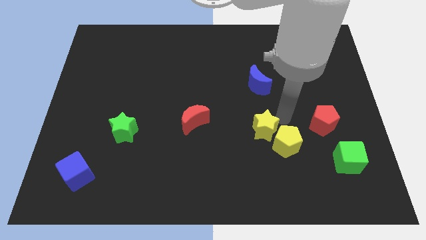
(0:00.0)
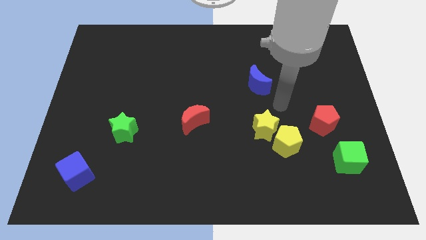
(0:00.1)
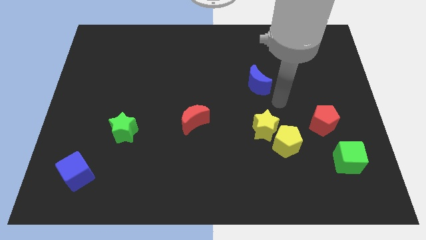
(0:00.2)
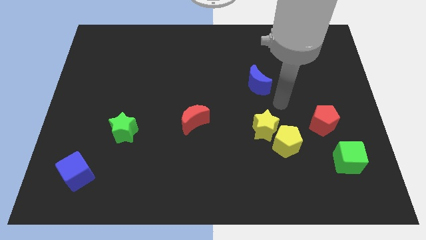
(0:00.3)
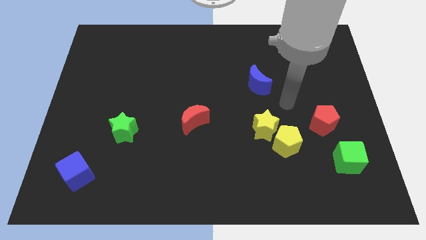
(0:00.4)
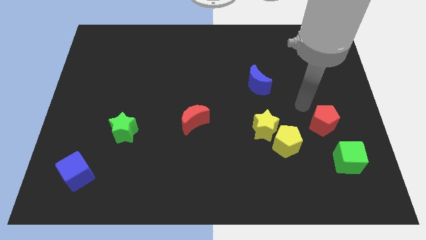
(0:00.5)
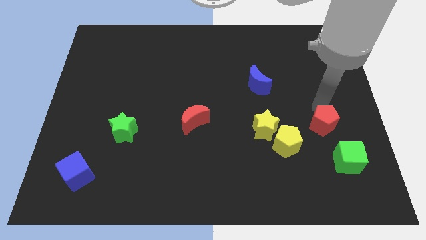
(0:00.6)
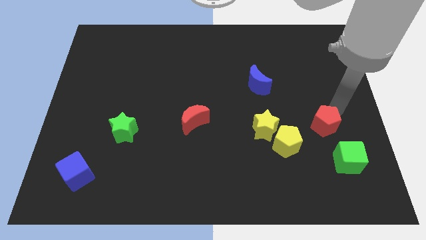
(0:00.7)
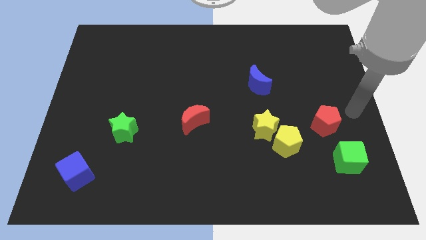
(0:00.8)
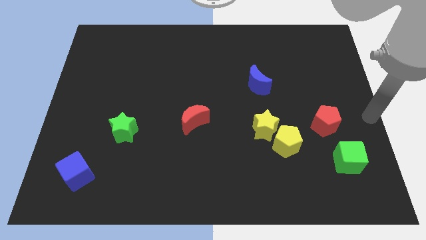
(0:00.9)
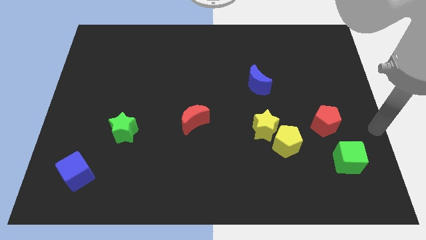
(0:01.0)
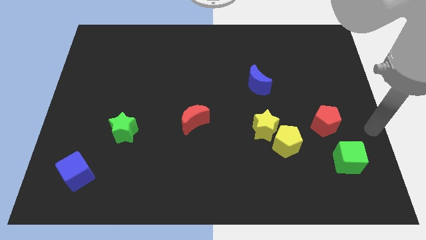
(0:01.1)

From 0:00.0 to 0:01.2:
move your arm away from the yellow blocks

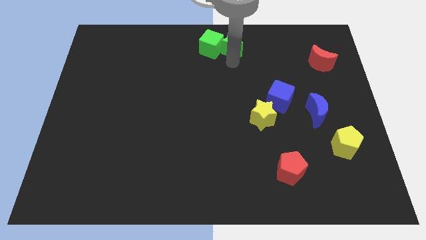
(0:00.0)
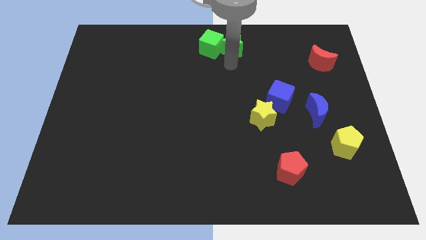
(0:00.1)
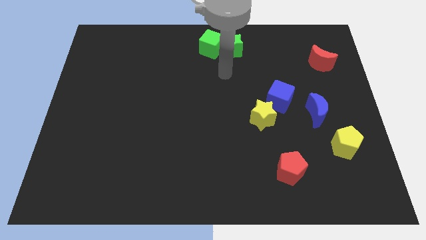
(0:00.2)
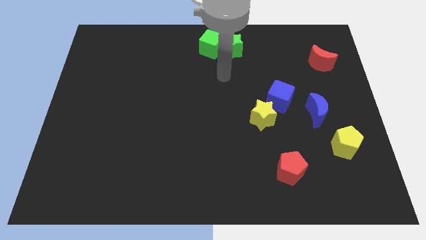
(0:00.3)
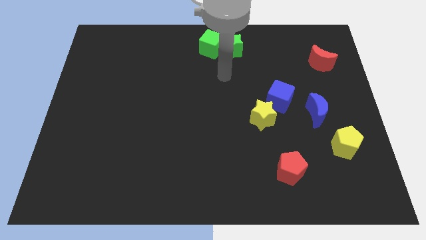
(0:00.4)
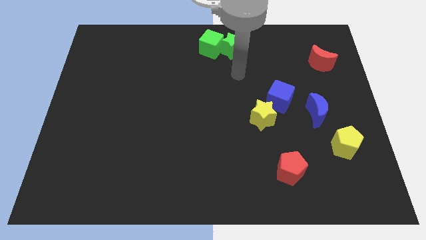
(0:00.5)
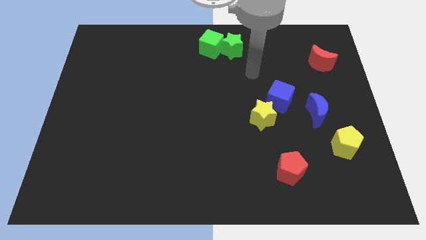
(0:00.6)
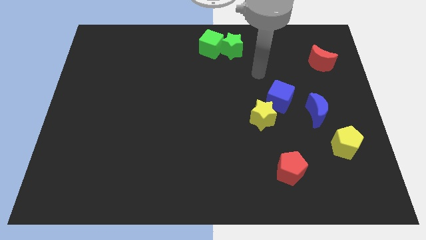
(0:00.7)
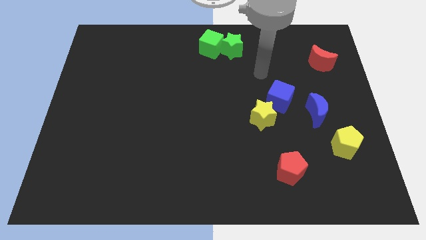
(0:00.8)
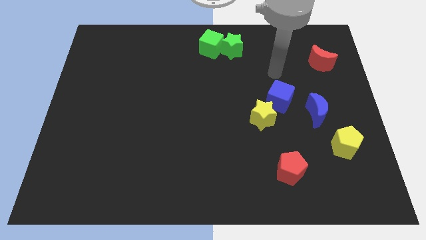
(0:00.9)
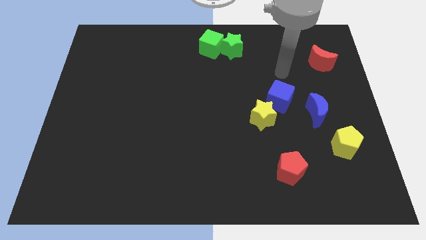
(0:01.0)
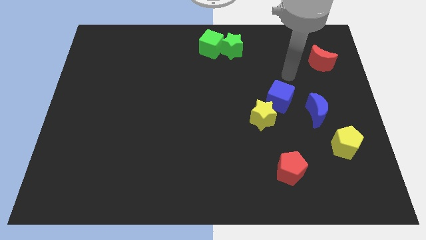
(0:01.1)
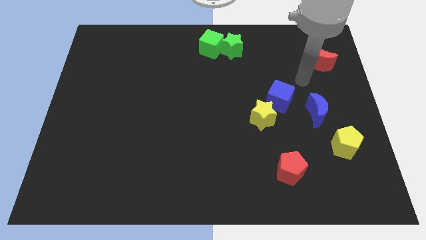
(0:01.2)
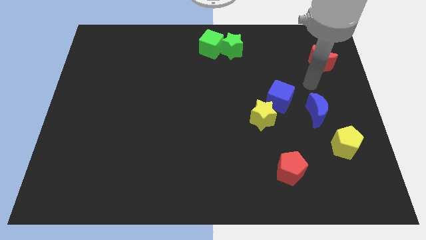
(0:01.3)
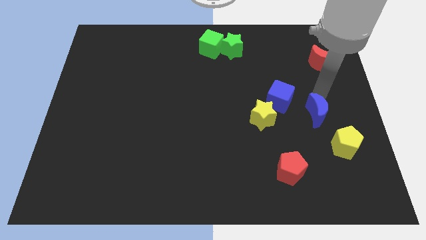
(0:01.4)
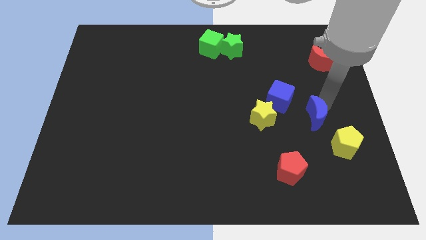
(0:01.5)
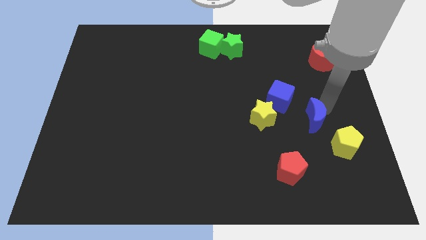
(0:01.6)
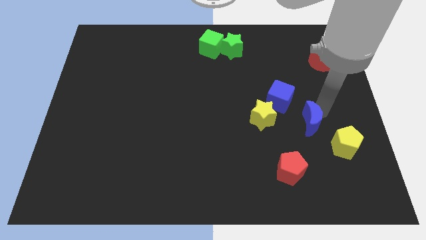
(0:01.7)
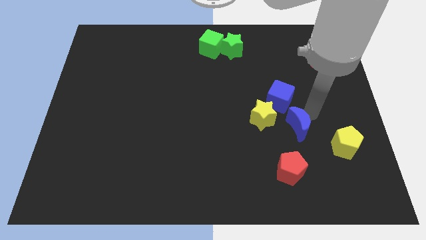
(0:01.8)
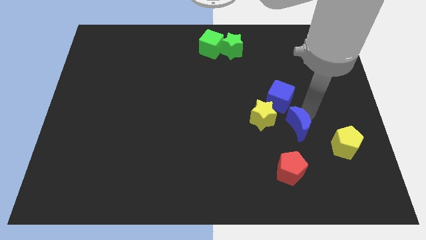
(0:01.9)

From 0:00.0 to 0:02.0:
move your arm towards the blue crescent and move slightly left

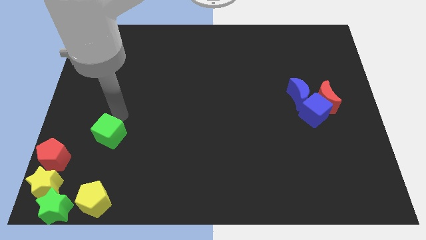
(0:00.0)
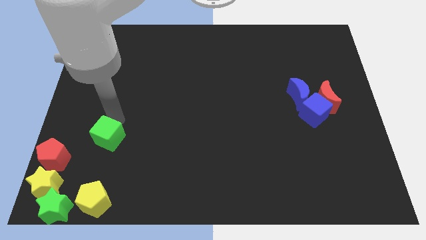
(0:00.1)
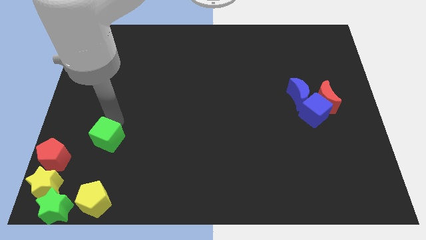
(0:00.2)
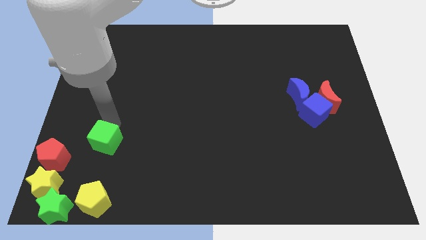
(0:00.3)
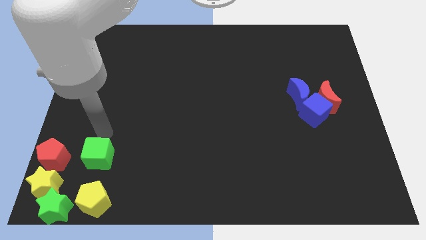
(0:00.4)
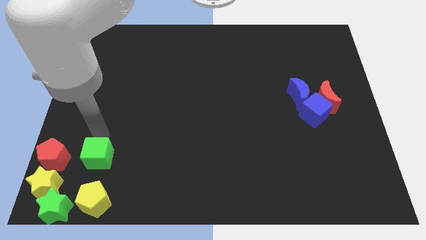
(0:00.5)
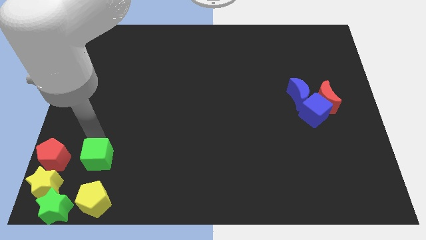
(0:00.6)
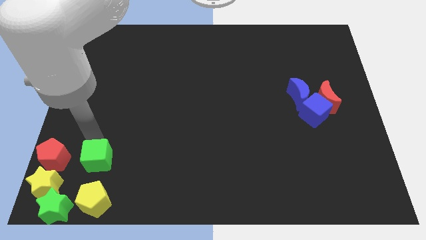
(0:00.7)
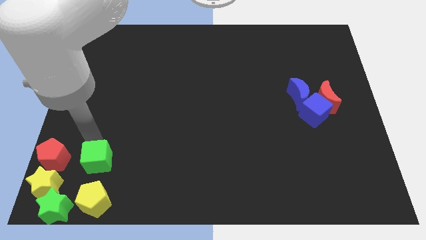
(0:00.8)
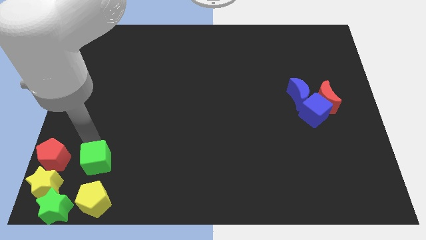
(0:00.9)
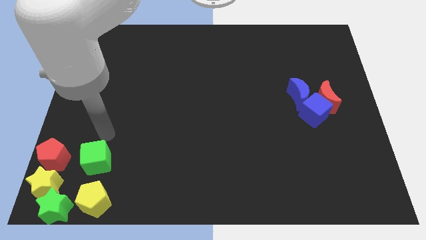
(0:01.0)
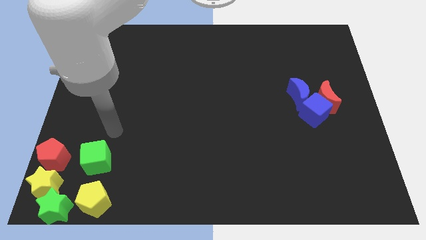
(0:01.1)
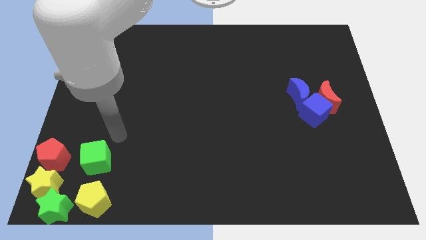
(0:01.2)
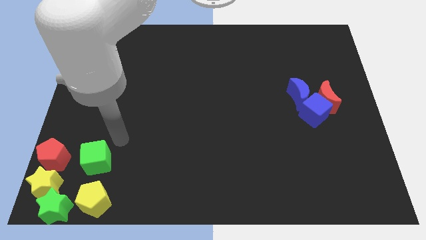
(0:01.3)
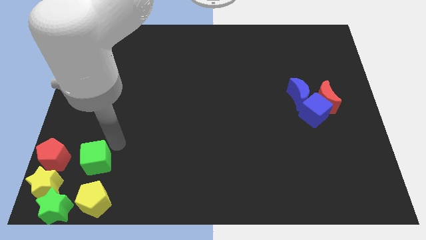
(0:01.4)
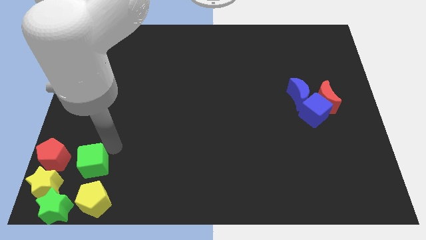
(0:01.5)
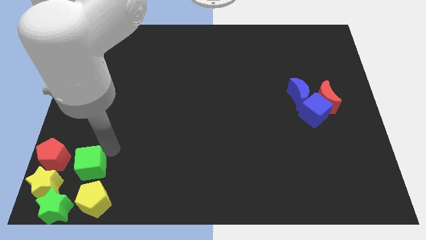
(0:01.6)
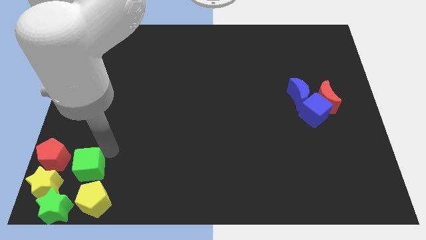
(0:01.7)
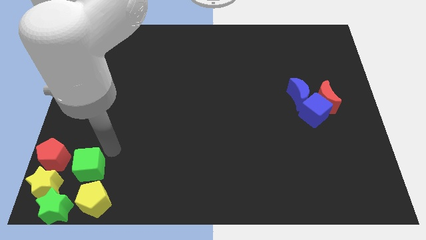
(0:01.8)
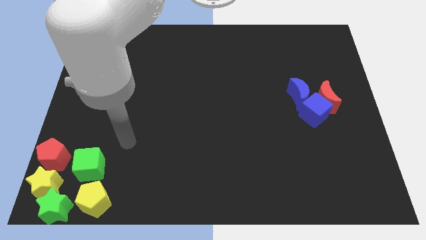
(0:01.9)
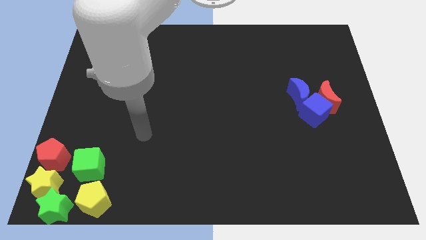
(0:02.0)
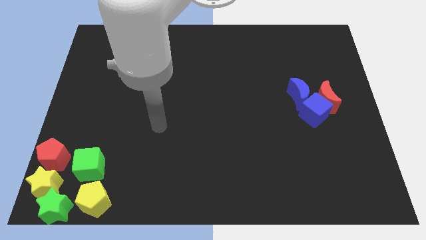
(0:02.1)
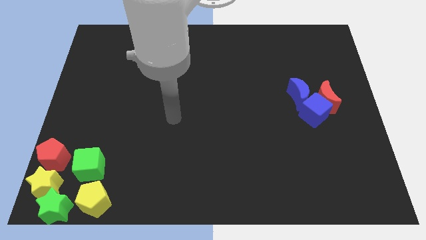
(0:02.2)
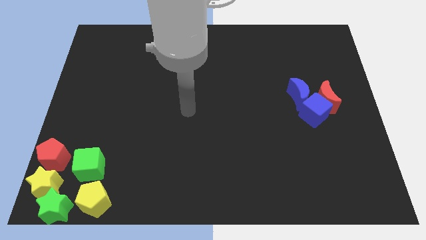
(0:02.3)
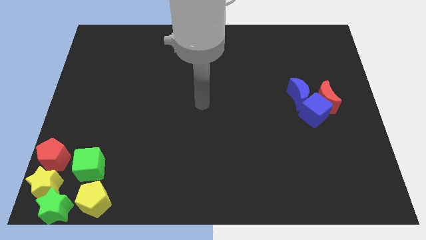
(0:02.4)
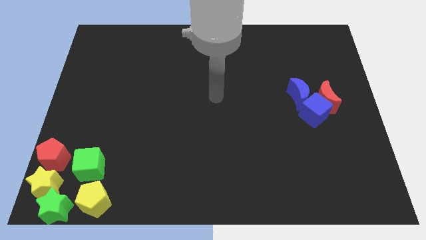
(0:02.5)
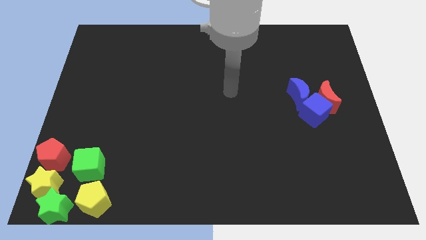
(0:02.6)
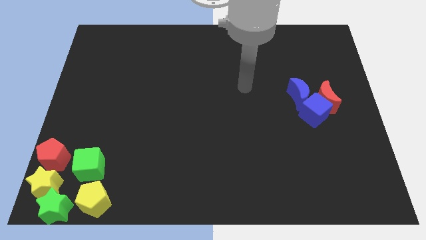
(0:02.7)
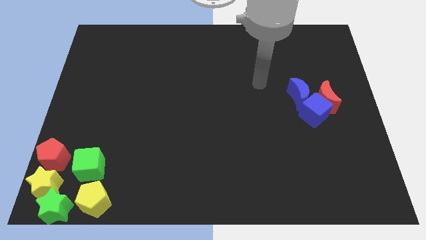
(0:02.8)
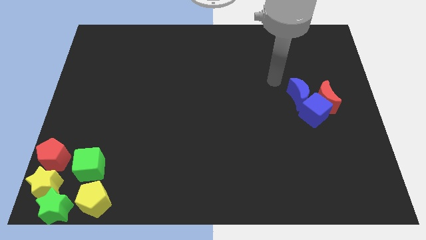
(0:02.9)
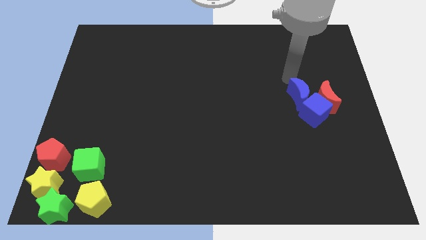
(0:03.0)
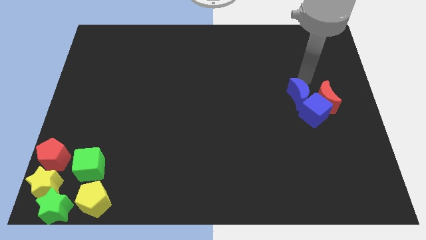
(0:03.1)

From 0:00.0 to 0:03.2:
add the green cube to the group of blocks at the bottom left corner of the board

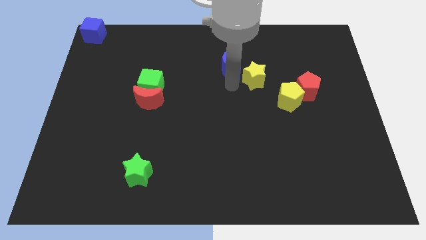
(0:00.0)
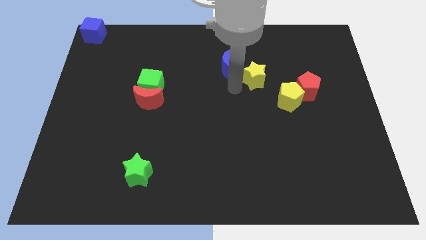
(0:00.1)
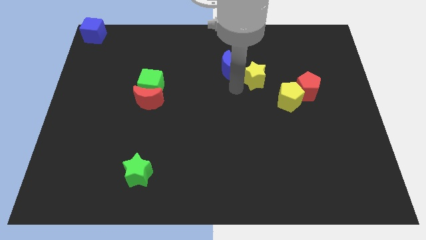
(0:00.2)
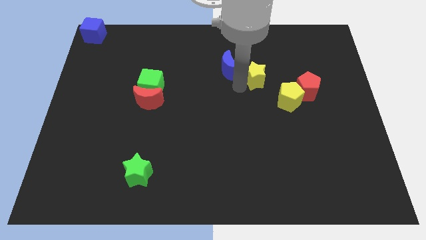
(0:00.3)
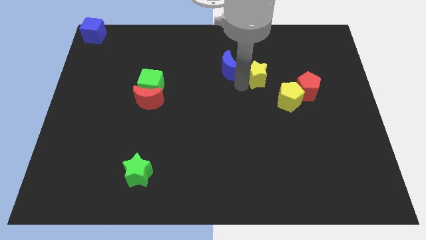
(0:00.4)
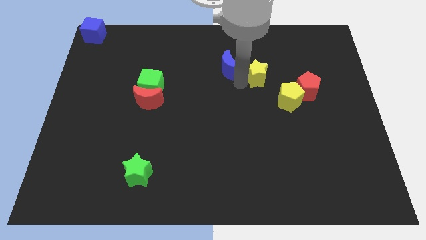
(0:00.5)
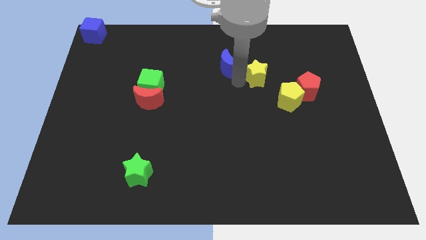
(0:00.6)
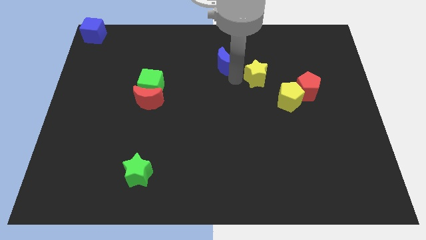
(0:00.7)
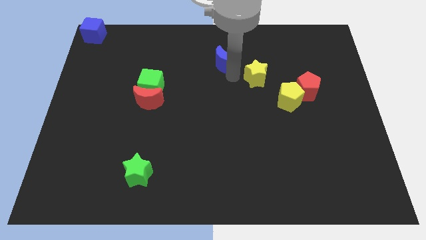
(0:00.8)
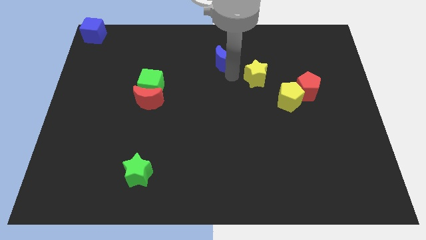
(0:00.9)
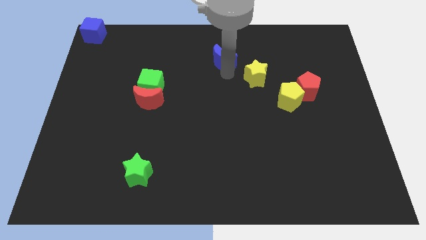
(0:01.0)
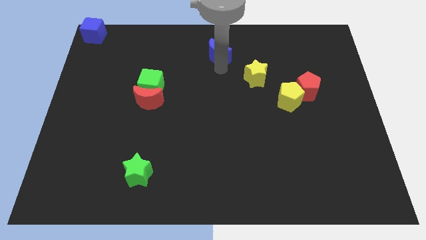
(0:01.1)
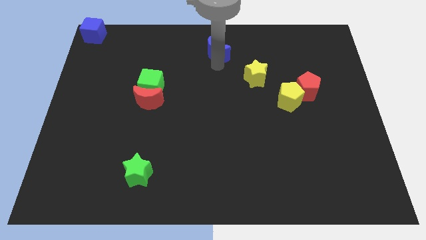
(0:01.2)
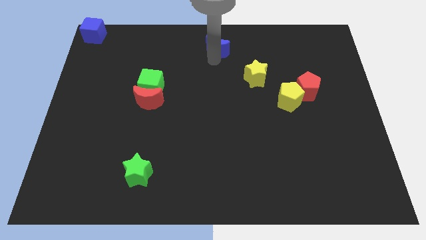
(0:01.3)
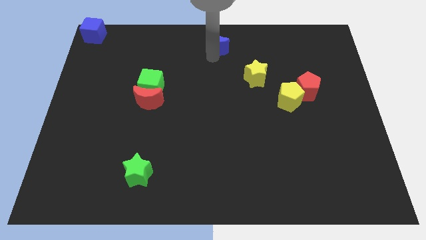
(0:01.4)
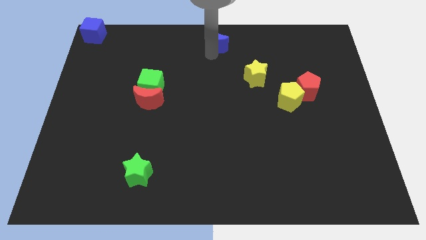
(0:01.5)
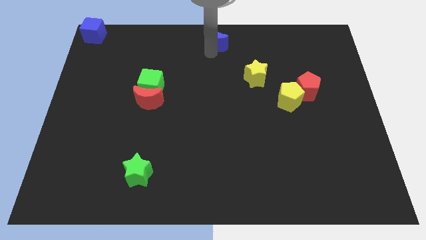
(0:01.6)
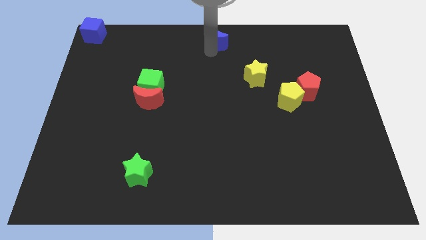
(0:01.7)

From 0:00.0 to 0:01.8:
move the blue crescent away from the yellow star

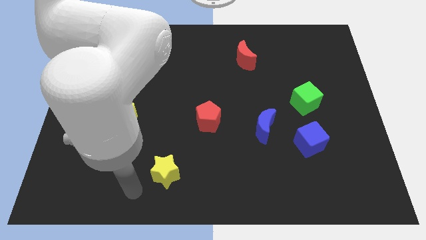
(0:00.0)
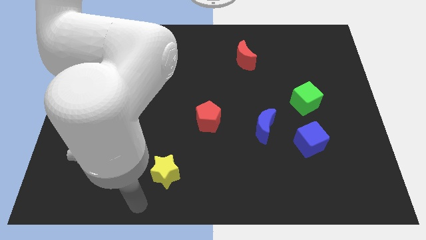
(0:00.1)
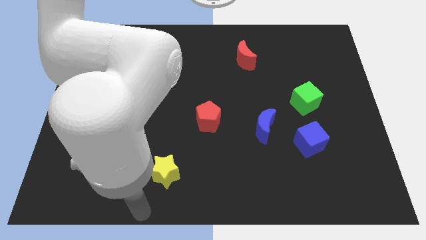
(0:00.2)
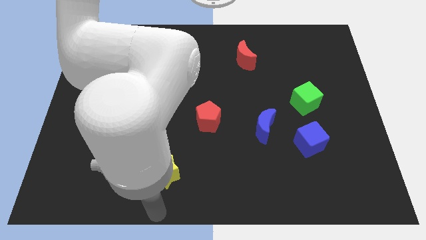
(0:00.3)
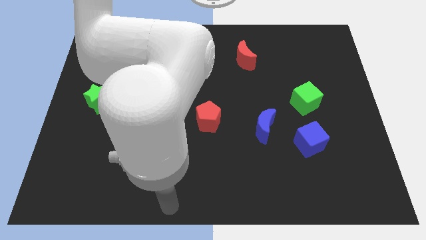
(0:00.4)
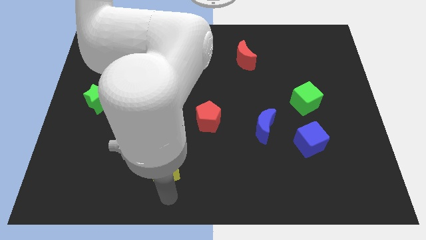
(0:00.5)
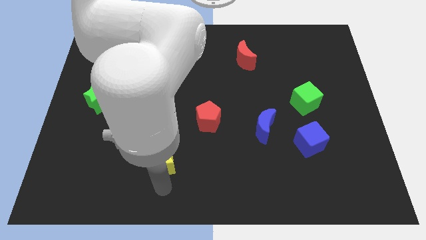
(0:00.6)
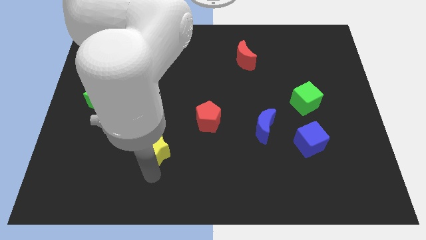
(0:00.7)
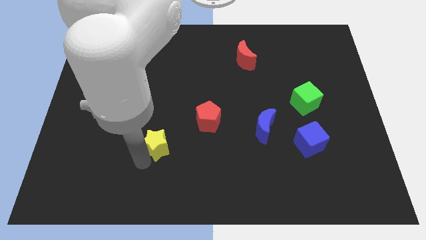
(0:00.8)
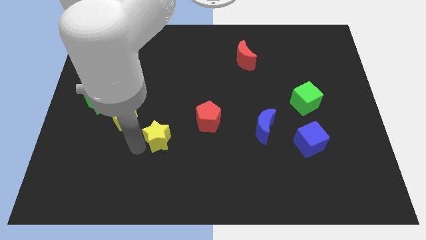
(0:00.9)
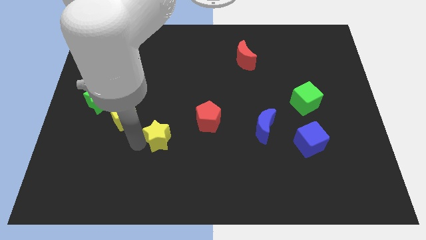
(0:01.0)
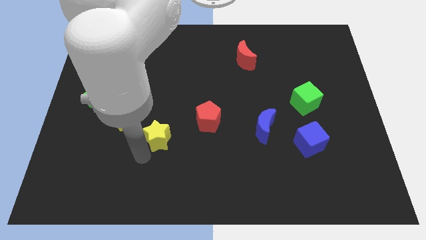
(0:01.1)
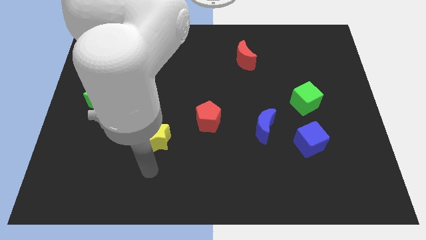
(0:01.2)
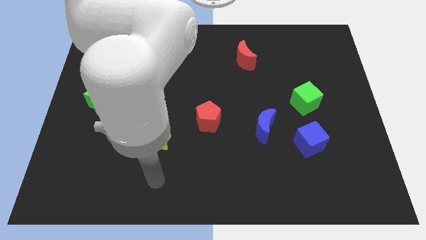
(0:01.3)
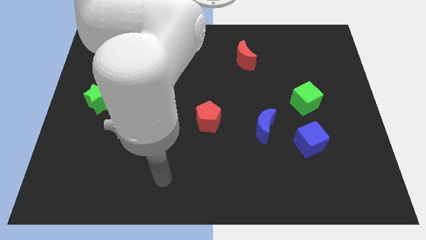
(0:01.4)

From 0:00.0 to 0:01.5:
place the yellow star diagonally to red pentagon
